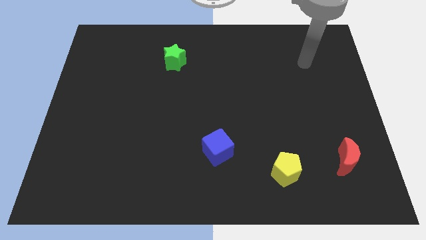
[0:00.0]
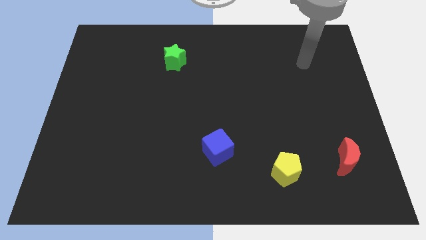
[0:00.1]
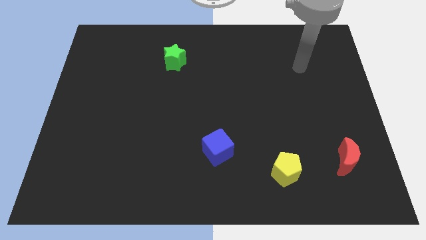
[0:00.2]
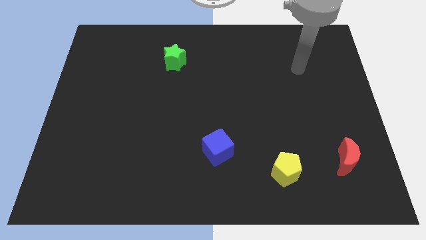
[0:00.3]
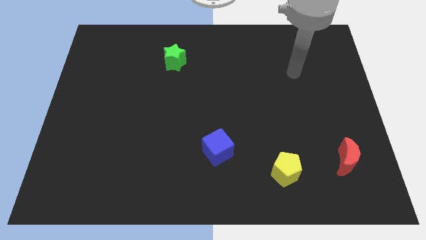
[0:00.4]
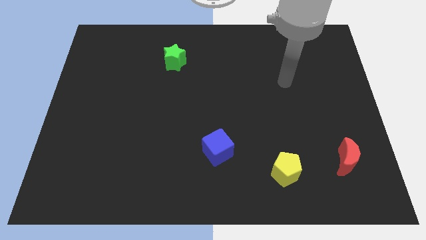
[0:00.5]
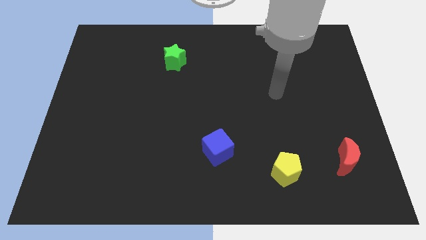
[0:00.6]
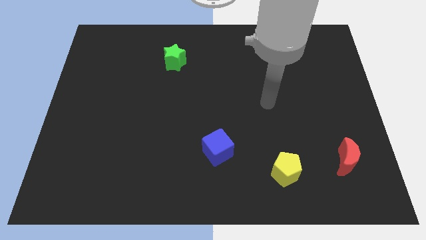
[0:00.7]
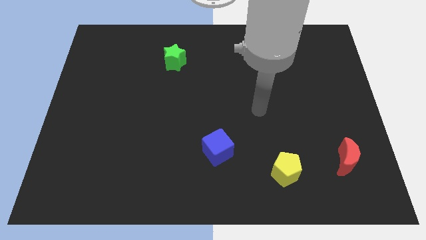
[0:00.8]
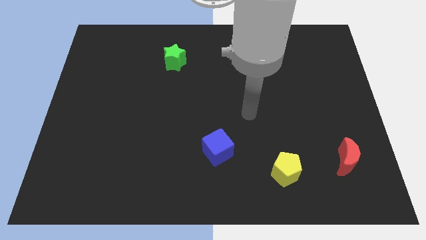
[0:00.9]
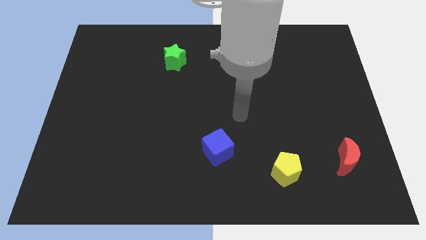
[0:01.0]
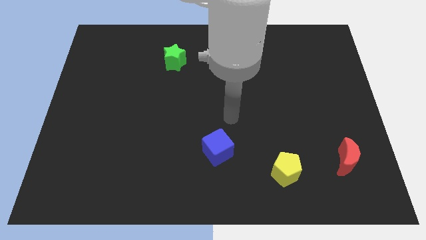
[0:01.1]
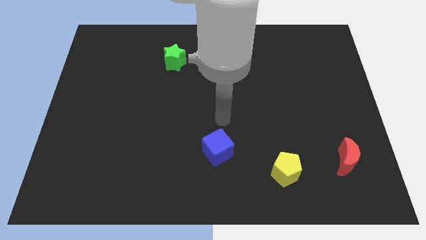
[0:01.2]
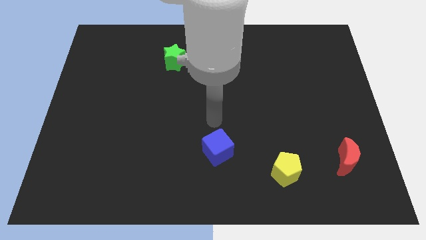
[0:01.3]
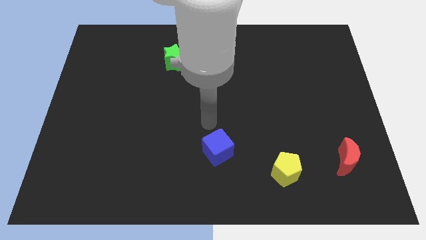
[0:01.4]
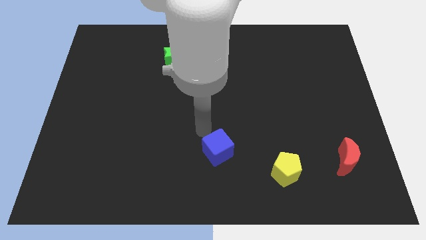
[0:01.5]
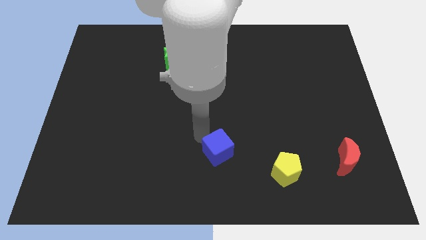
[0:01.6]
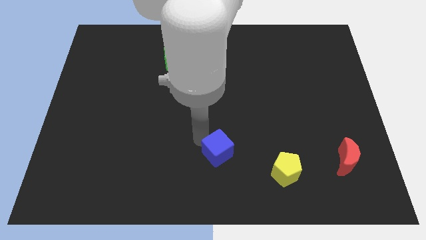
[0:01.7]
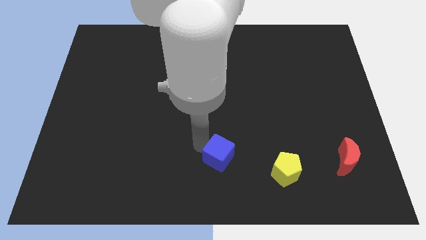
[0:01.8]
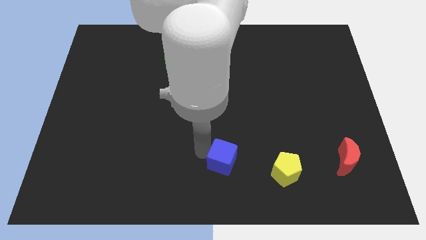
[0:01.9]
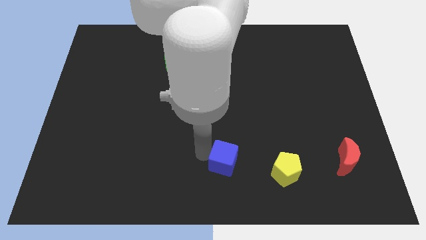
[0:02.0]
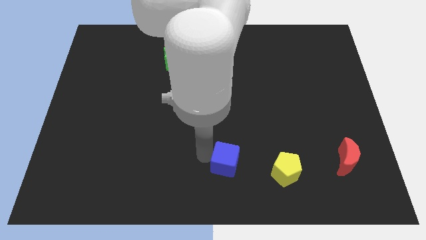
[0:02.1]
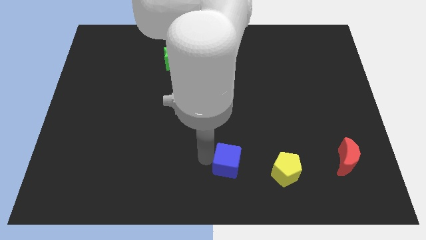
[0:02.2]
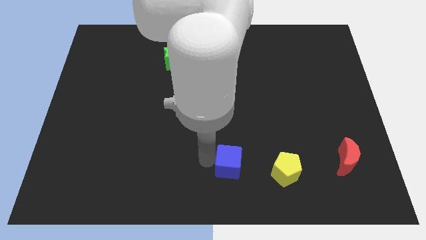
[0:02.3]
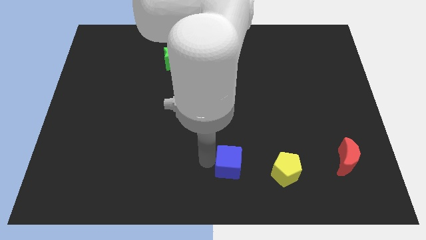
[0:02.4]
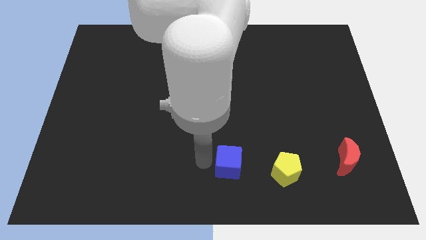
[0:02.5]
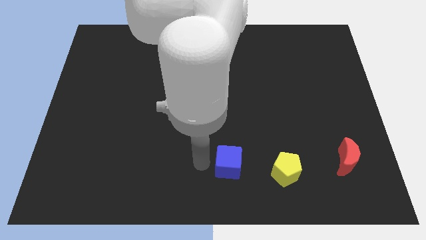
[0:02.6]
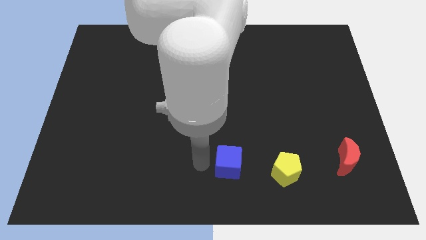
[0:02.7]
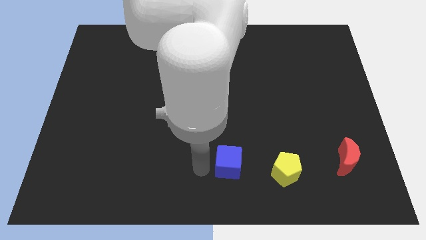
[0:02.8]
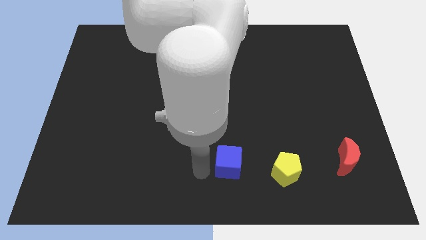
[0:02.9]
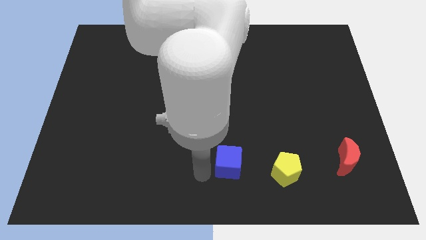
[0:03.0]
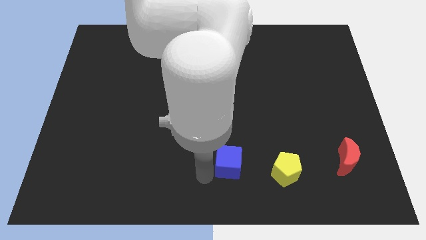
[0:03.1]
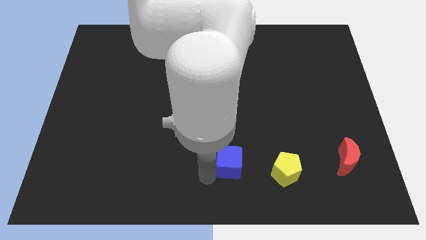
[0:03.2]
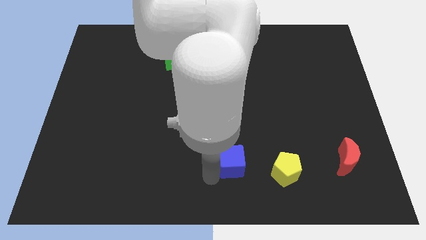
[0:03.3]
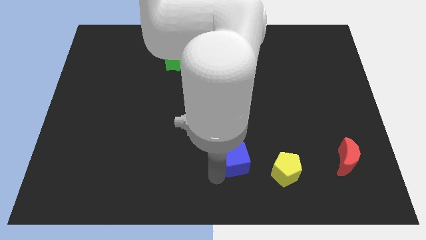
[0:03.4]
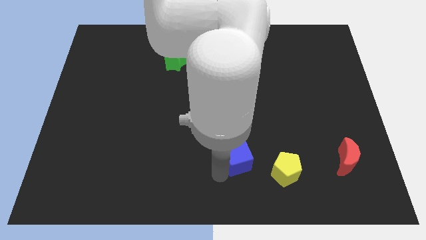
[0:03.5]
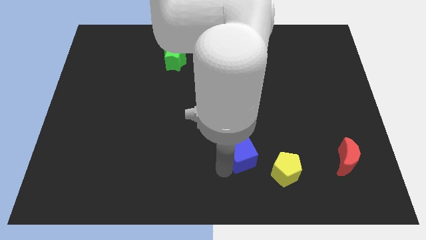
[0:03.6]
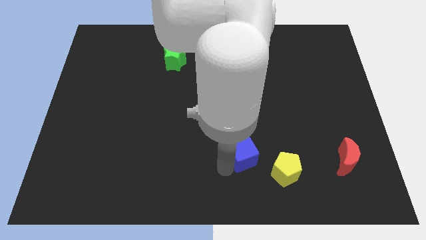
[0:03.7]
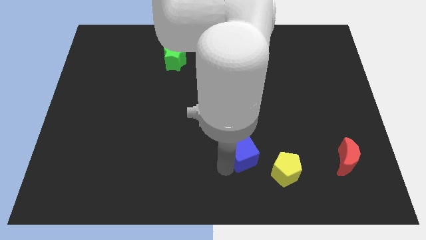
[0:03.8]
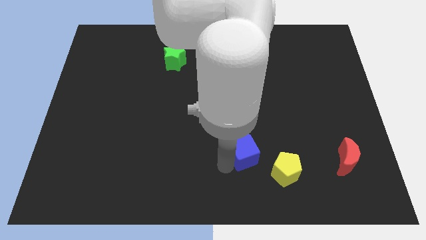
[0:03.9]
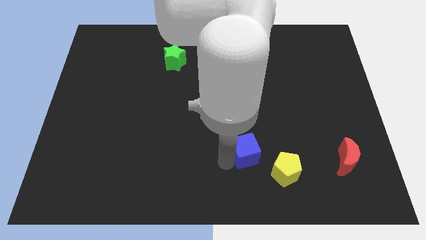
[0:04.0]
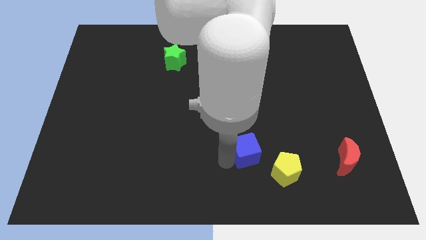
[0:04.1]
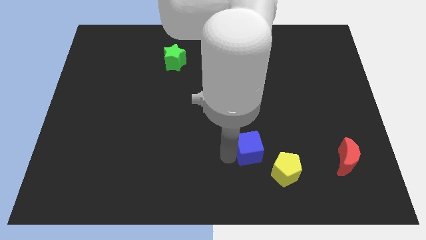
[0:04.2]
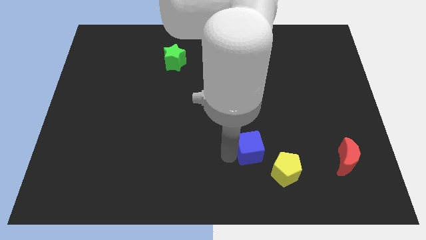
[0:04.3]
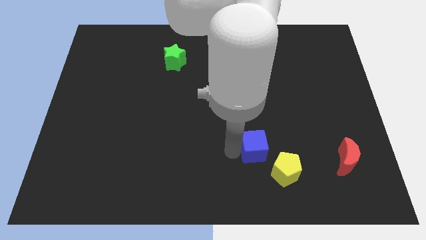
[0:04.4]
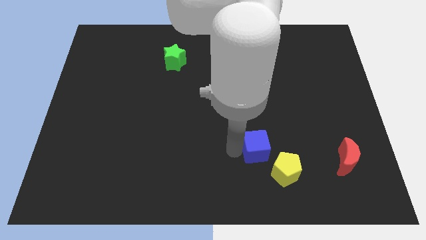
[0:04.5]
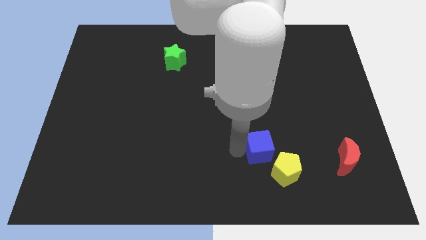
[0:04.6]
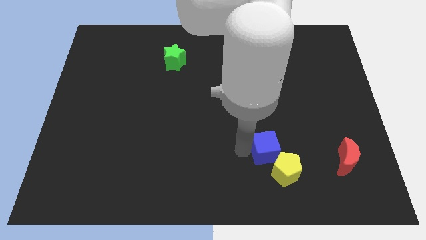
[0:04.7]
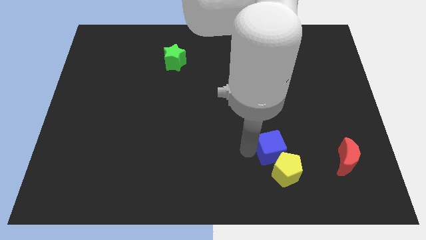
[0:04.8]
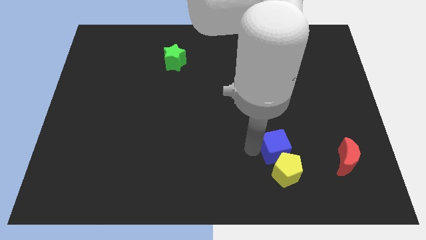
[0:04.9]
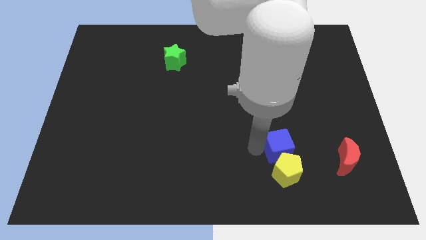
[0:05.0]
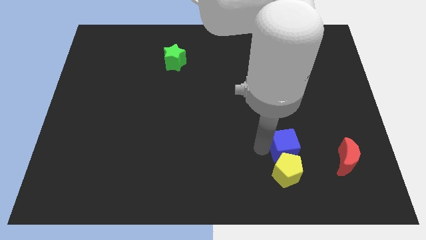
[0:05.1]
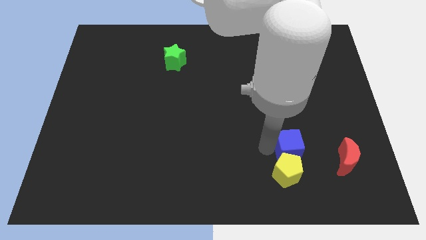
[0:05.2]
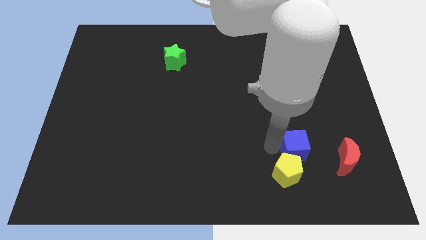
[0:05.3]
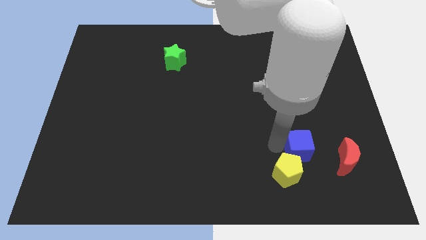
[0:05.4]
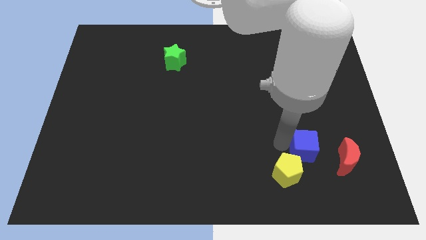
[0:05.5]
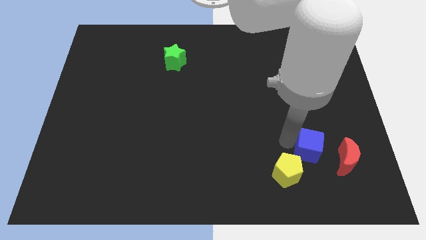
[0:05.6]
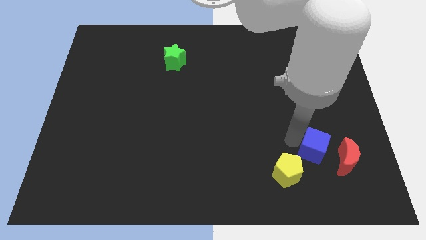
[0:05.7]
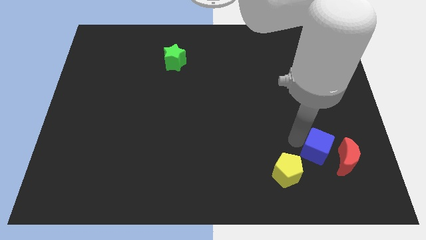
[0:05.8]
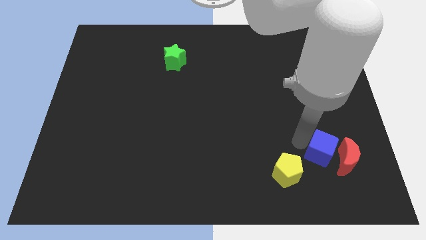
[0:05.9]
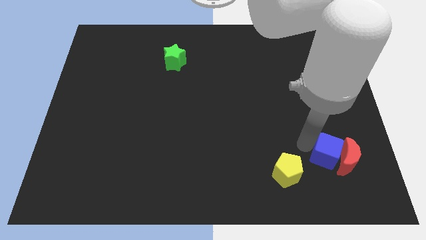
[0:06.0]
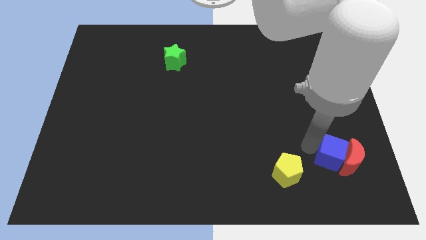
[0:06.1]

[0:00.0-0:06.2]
push the blue cube next to the moon

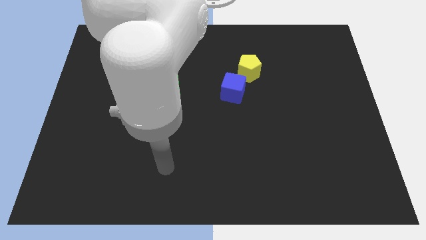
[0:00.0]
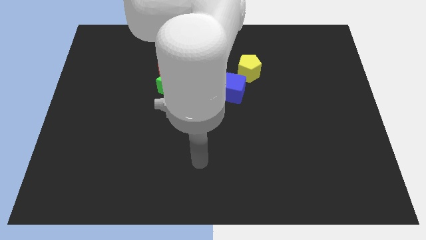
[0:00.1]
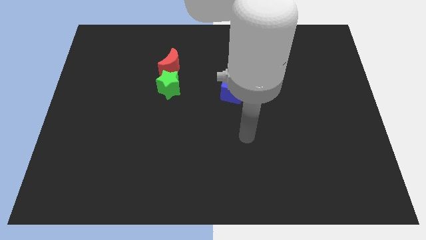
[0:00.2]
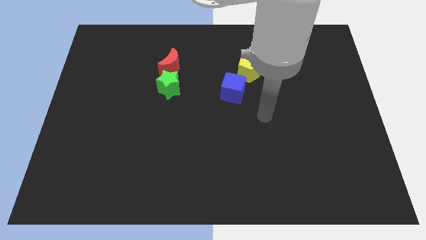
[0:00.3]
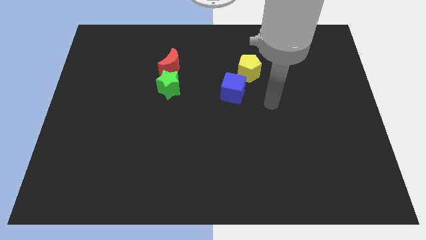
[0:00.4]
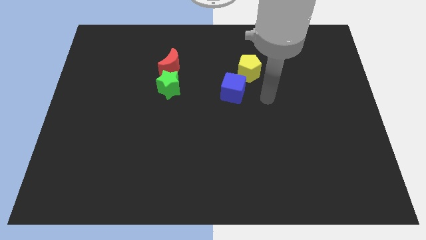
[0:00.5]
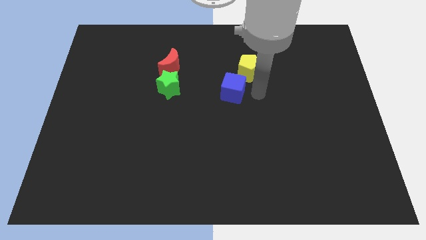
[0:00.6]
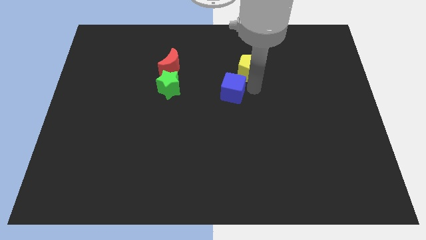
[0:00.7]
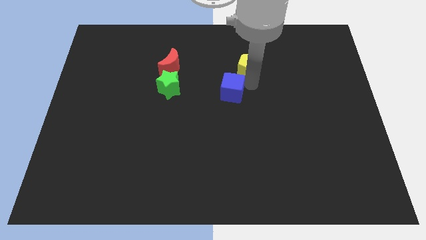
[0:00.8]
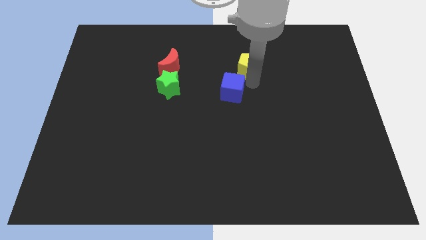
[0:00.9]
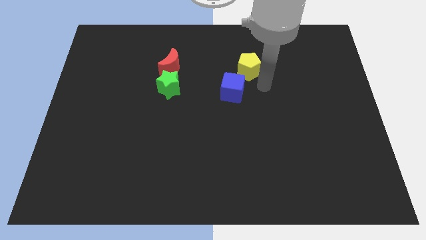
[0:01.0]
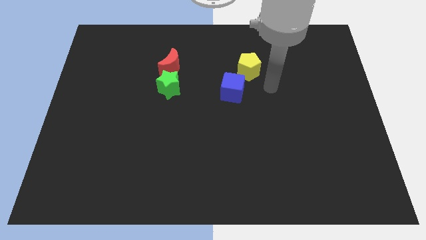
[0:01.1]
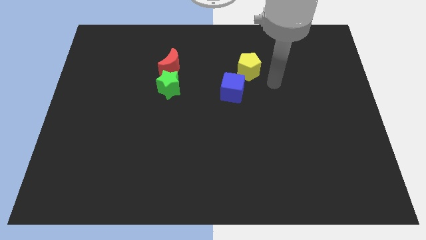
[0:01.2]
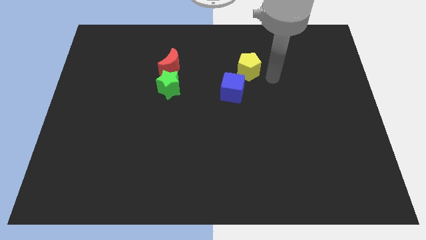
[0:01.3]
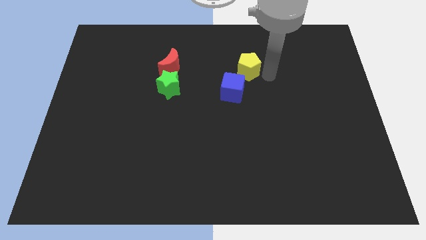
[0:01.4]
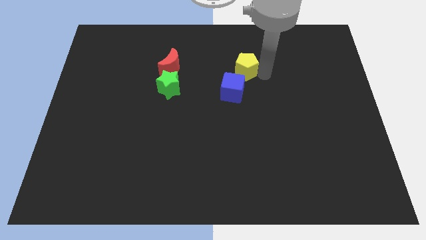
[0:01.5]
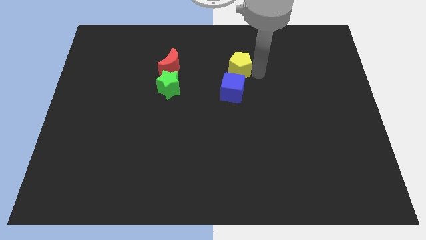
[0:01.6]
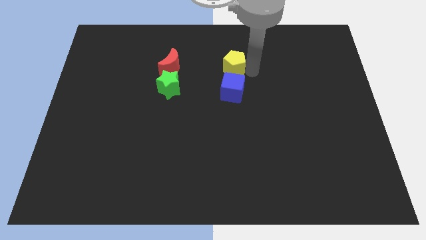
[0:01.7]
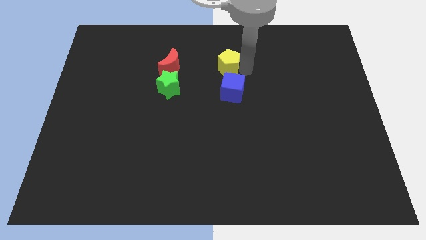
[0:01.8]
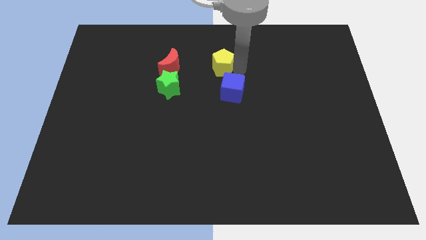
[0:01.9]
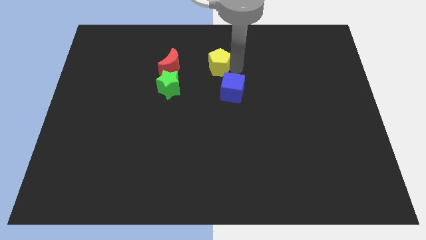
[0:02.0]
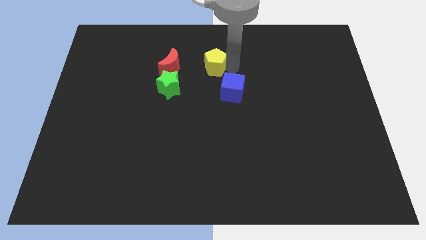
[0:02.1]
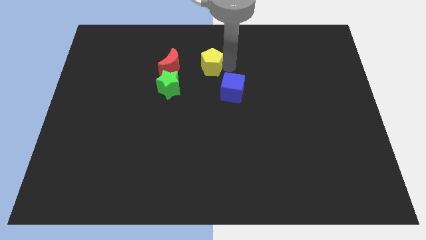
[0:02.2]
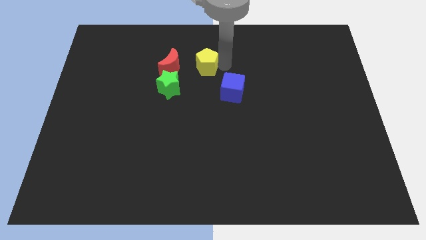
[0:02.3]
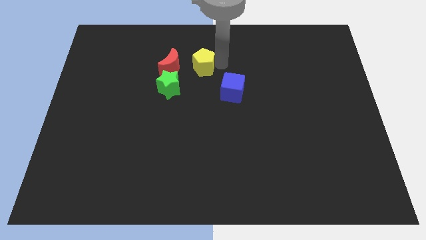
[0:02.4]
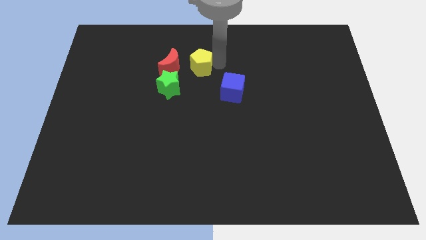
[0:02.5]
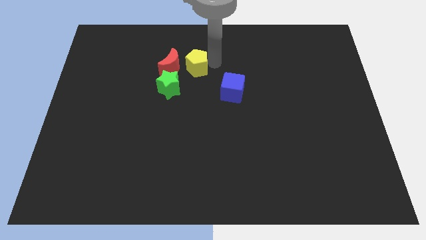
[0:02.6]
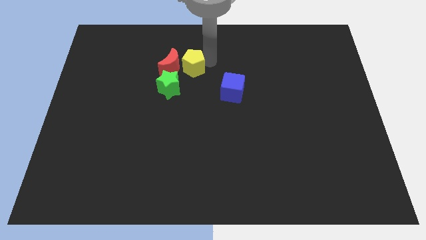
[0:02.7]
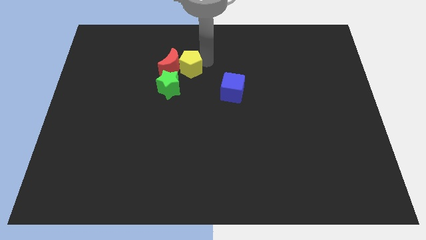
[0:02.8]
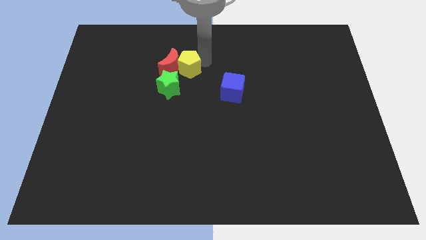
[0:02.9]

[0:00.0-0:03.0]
put the pentagon next to the red moon
